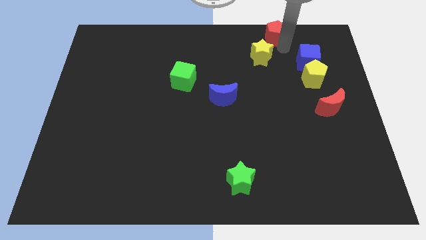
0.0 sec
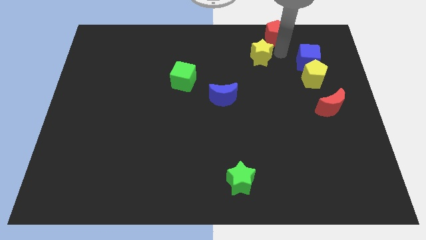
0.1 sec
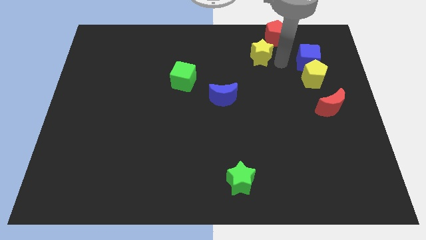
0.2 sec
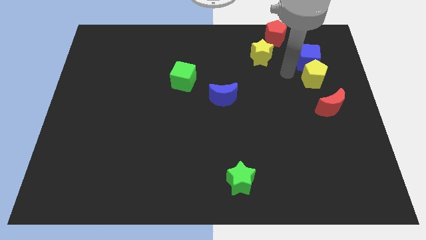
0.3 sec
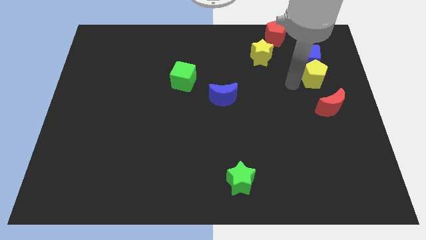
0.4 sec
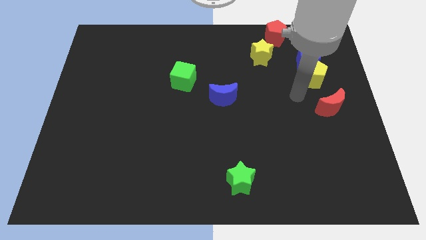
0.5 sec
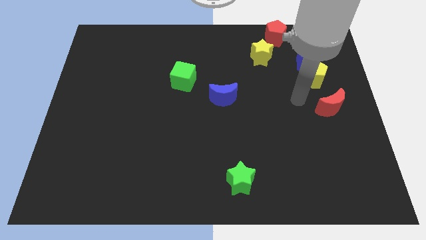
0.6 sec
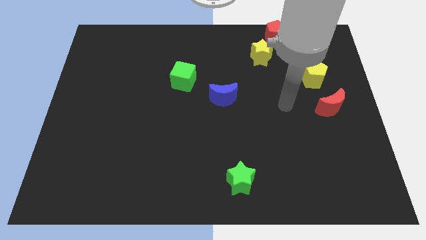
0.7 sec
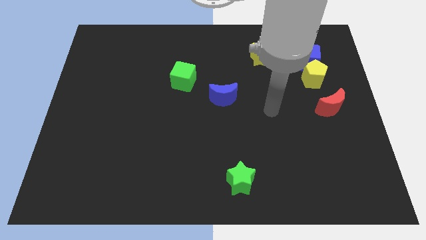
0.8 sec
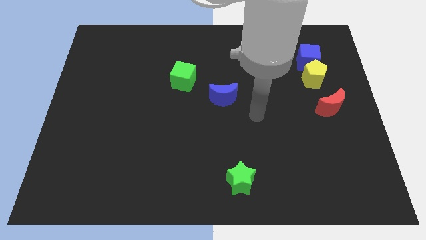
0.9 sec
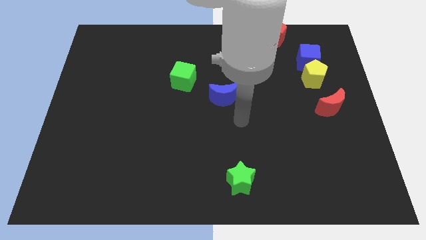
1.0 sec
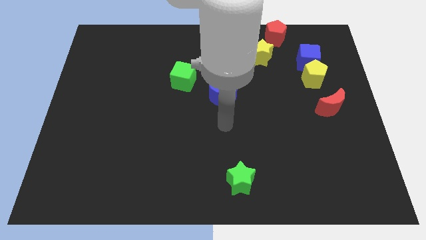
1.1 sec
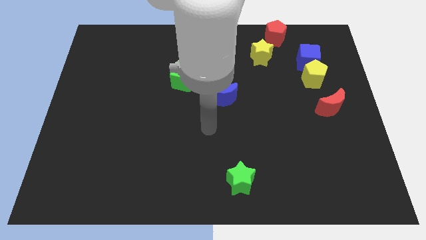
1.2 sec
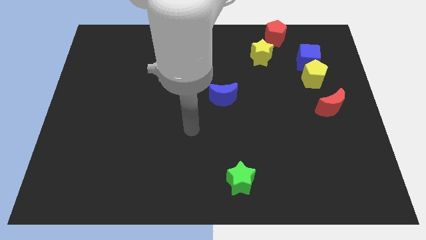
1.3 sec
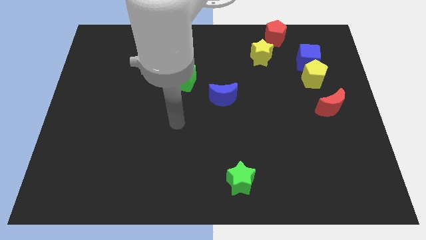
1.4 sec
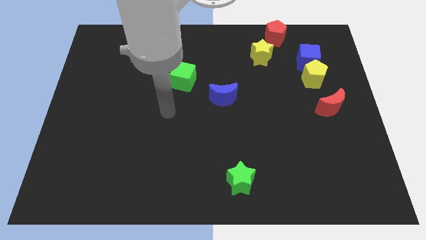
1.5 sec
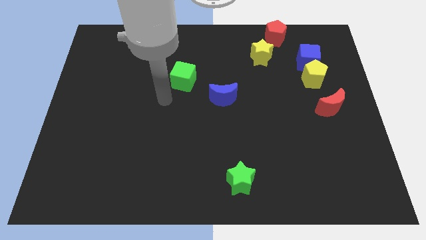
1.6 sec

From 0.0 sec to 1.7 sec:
move your hand away from the red pentagon

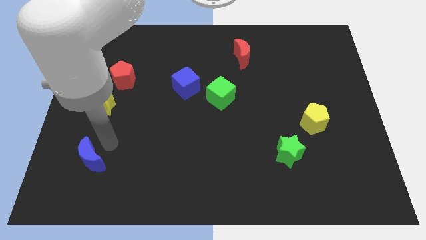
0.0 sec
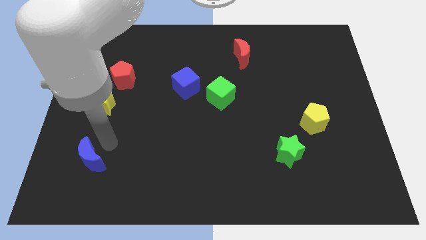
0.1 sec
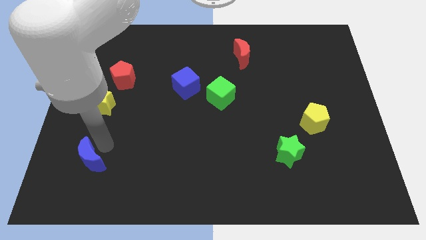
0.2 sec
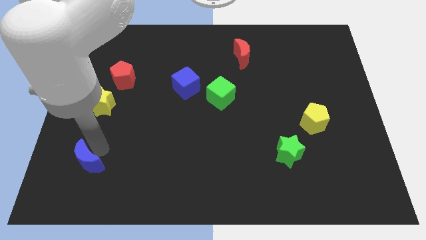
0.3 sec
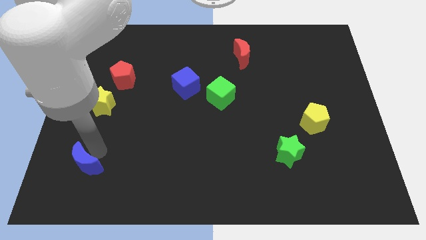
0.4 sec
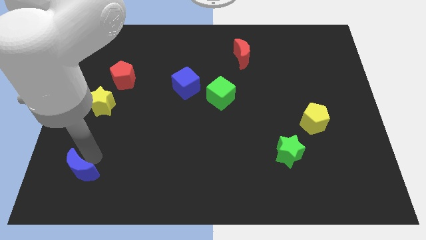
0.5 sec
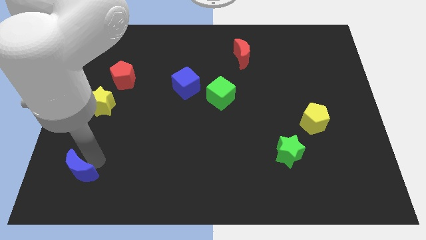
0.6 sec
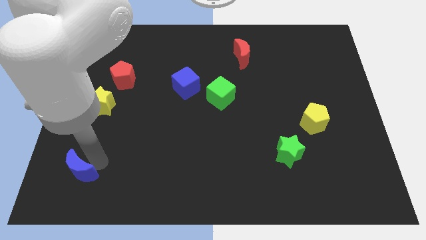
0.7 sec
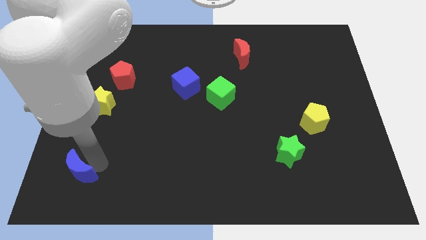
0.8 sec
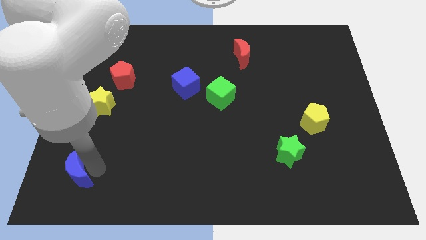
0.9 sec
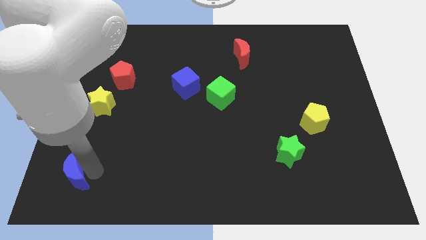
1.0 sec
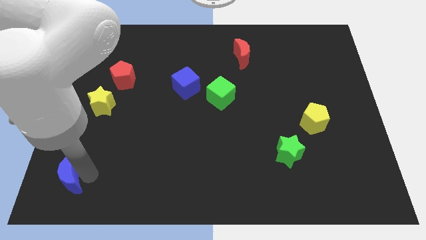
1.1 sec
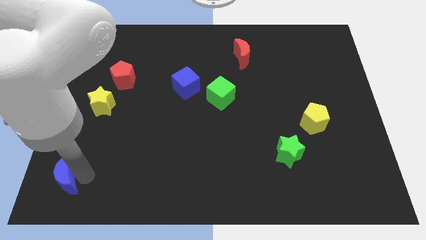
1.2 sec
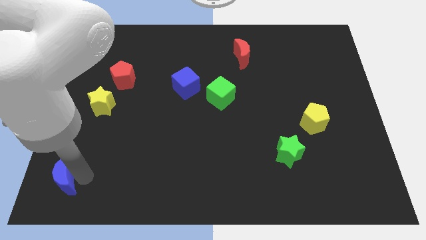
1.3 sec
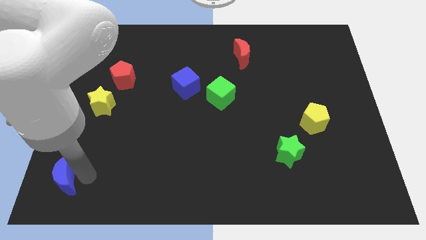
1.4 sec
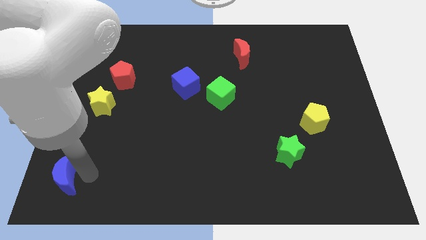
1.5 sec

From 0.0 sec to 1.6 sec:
move the blue crescent towards the bottom left

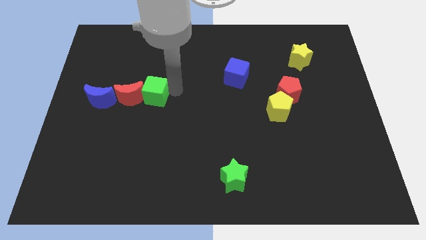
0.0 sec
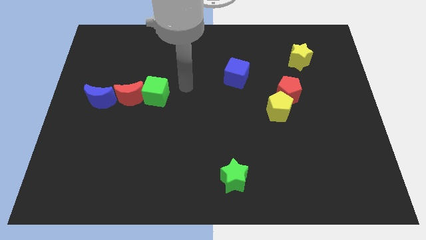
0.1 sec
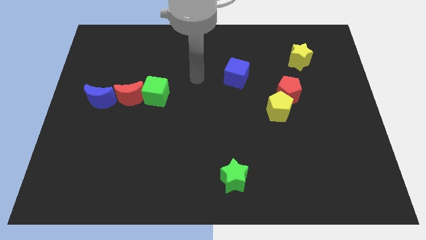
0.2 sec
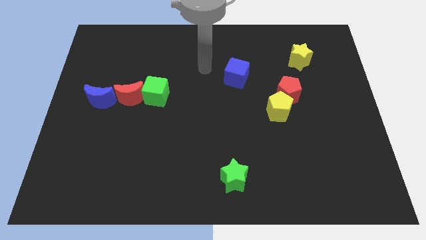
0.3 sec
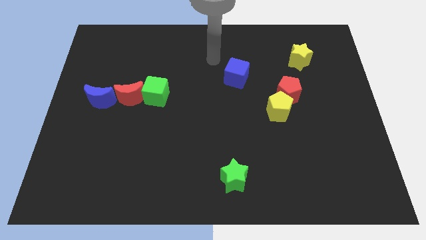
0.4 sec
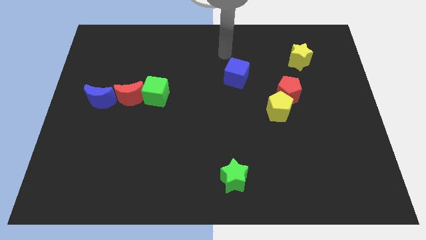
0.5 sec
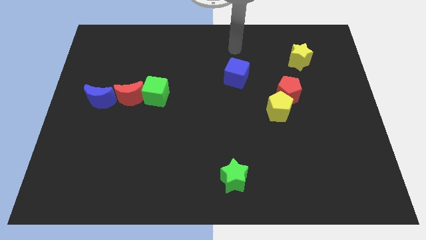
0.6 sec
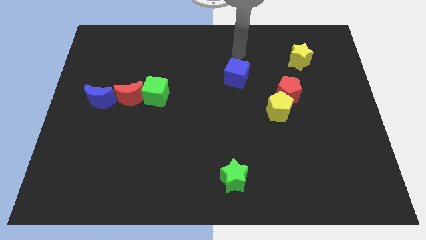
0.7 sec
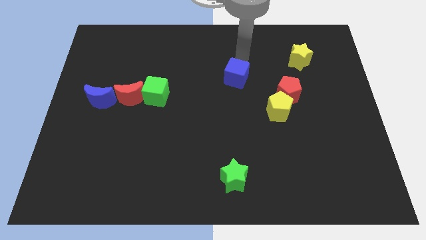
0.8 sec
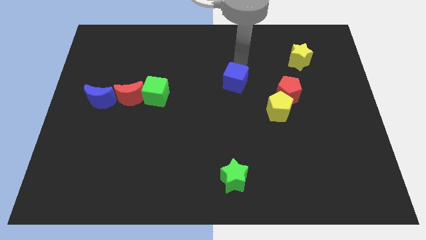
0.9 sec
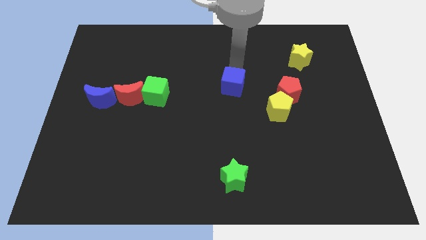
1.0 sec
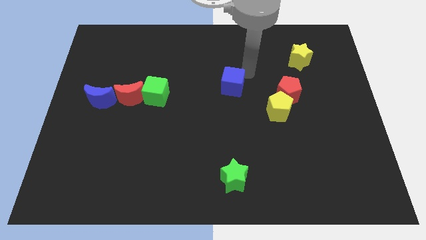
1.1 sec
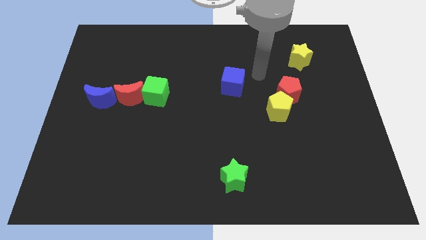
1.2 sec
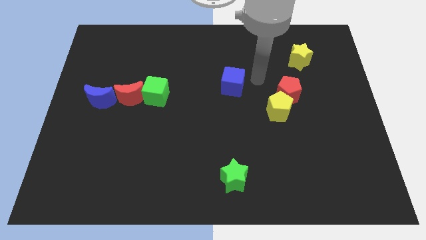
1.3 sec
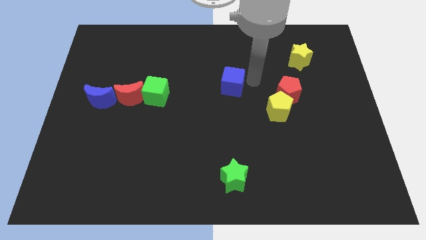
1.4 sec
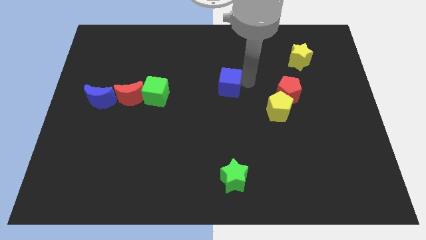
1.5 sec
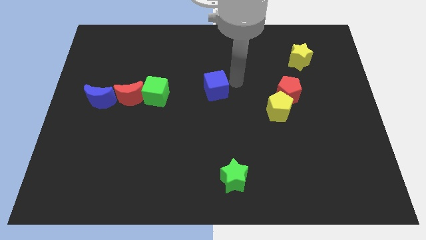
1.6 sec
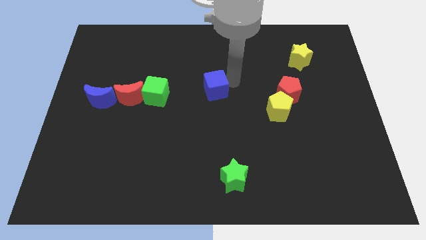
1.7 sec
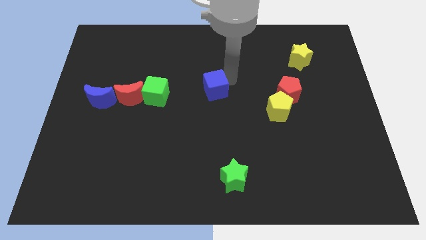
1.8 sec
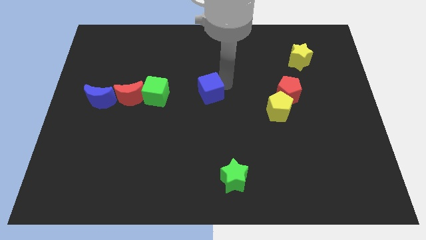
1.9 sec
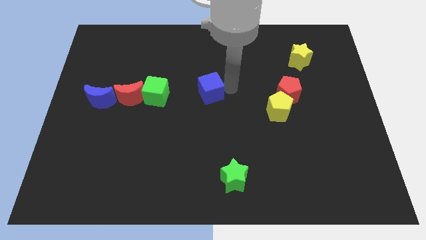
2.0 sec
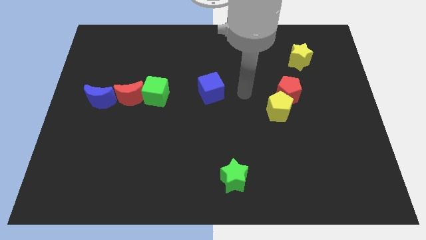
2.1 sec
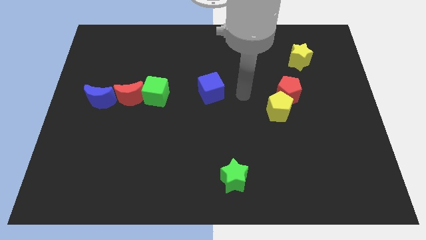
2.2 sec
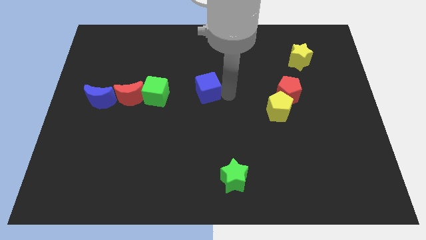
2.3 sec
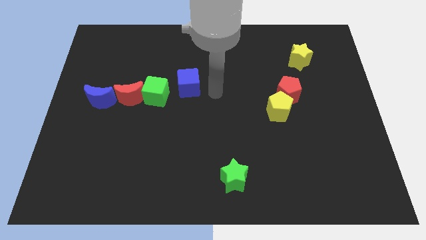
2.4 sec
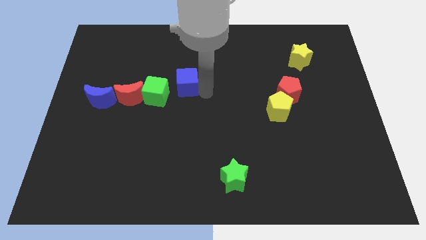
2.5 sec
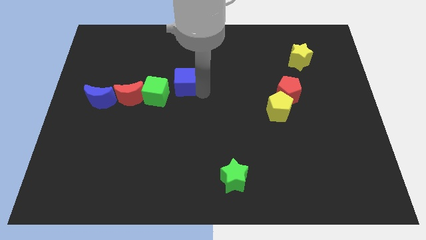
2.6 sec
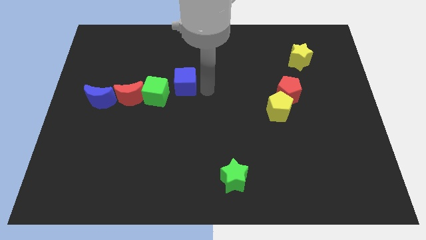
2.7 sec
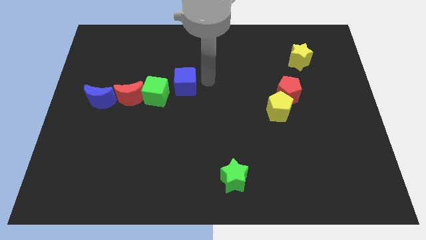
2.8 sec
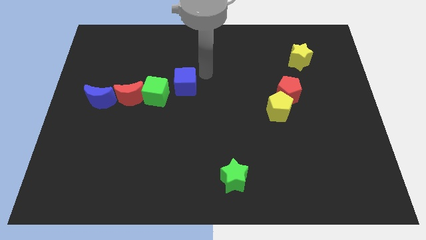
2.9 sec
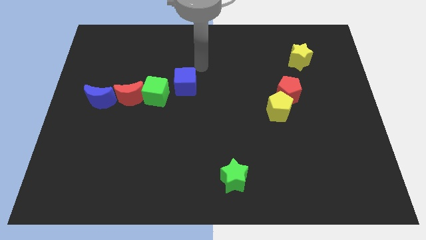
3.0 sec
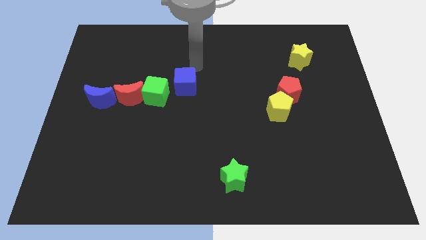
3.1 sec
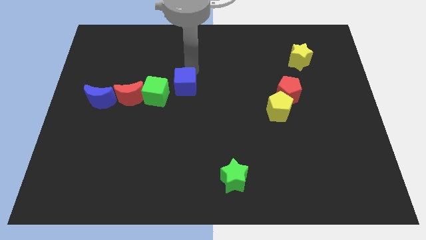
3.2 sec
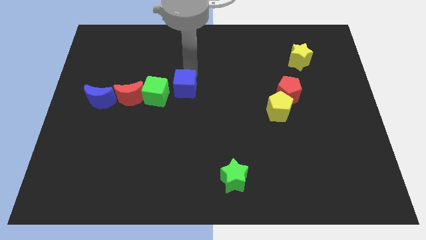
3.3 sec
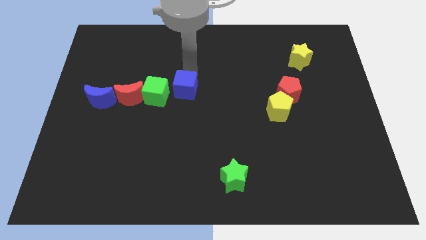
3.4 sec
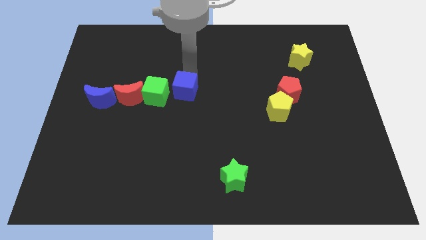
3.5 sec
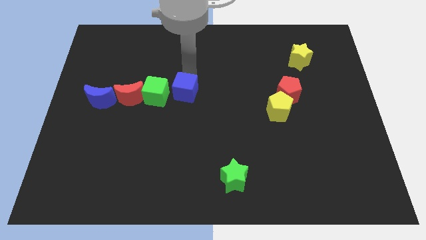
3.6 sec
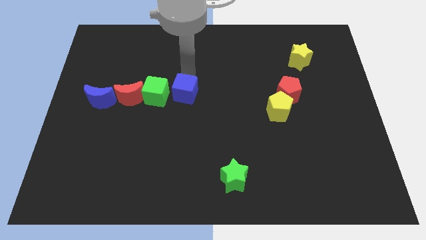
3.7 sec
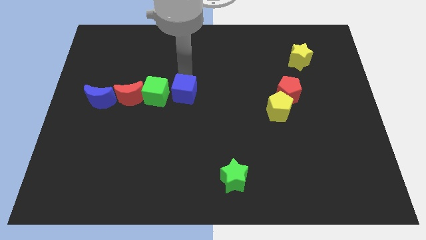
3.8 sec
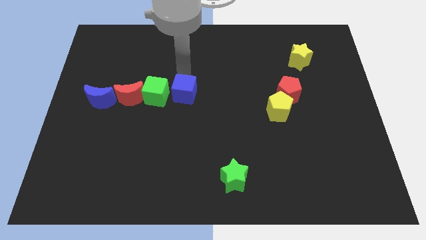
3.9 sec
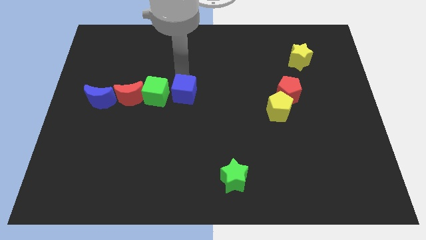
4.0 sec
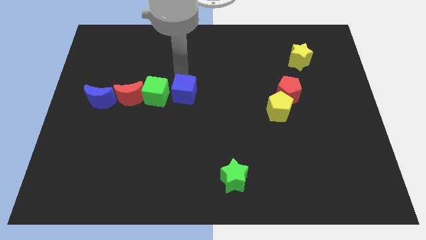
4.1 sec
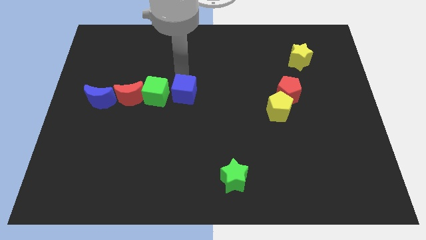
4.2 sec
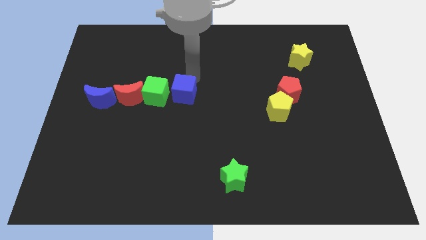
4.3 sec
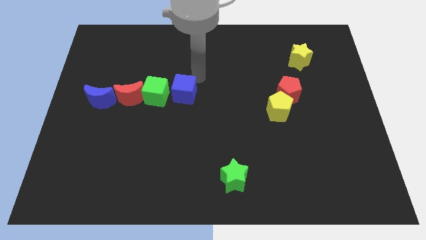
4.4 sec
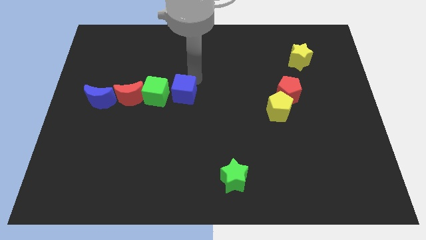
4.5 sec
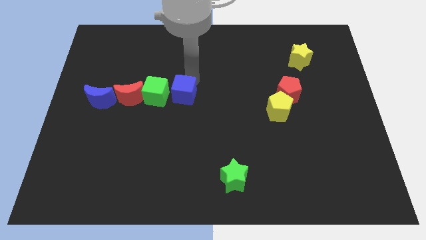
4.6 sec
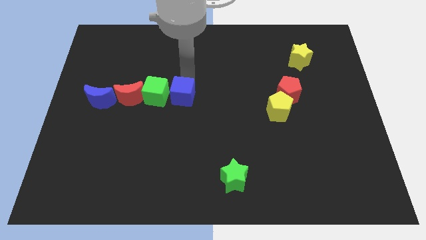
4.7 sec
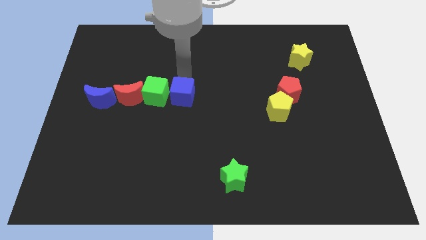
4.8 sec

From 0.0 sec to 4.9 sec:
push the blue cube into the green cube

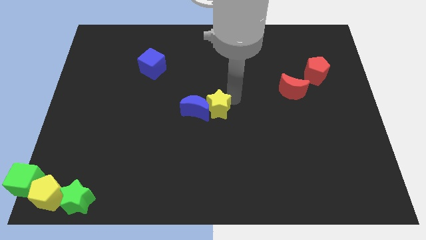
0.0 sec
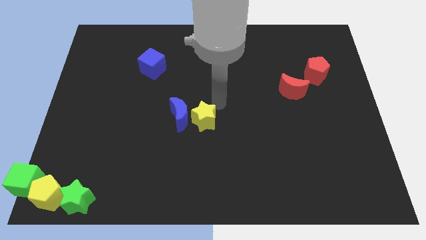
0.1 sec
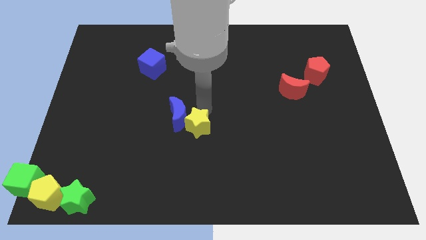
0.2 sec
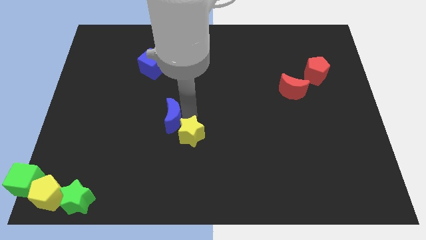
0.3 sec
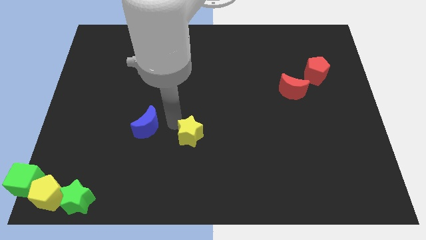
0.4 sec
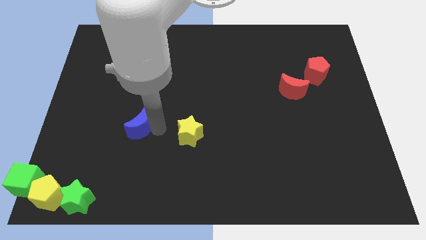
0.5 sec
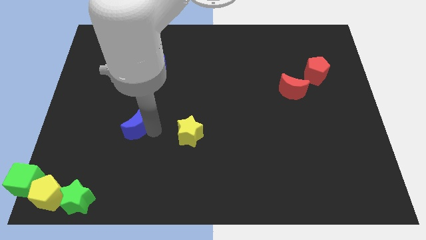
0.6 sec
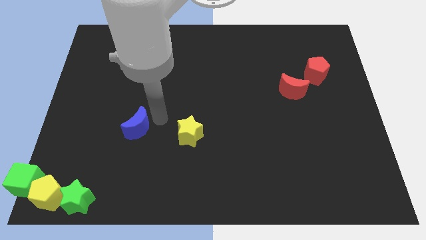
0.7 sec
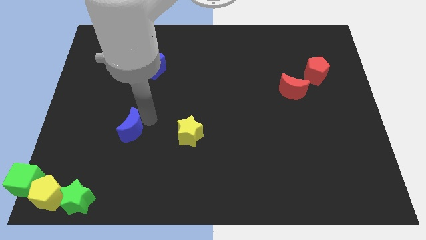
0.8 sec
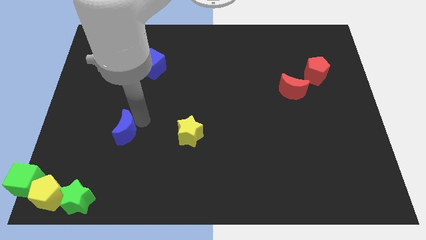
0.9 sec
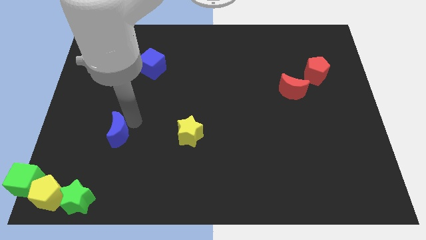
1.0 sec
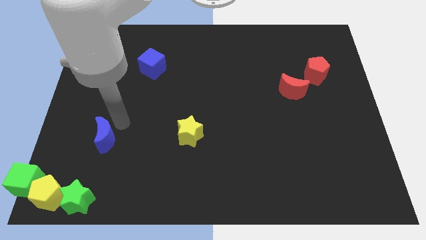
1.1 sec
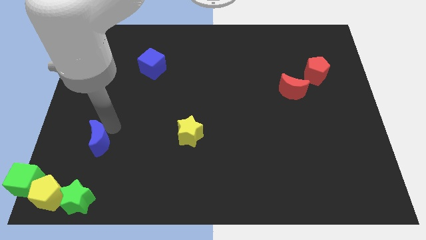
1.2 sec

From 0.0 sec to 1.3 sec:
separate blue moon from yellow star
